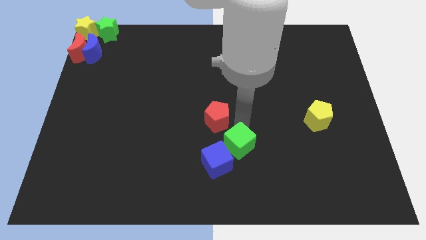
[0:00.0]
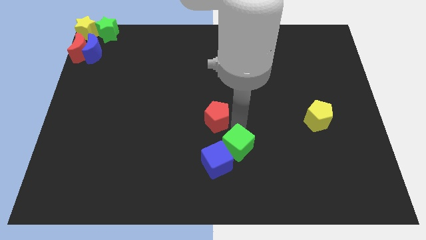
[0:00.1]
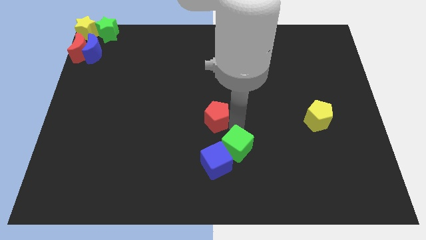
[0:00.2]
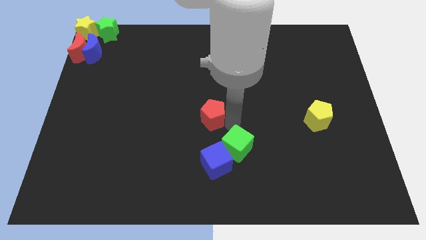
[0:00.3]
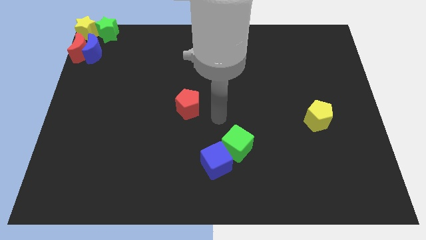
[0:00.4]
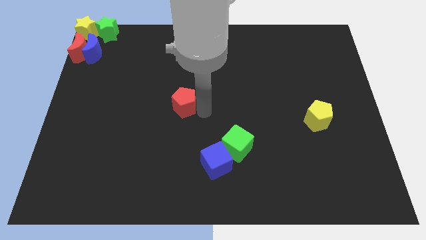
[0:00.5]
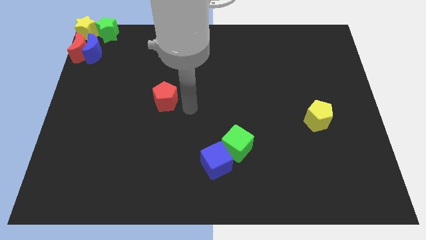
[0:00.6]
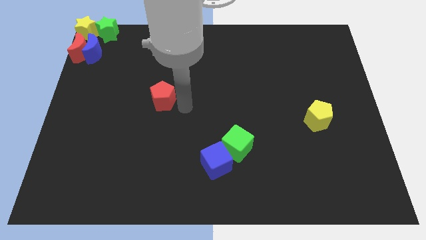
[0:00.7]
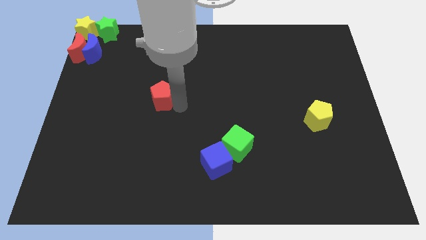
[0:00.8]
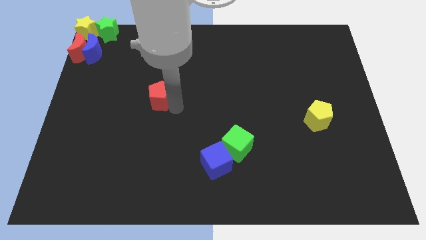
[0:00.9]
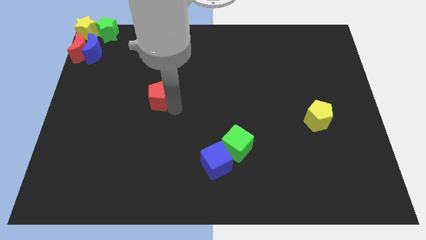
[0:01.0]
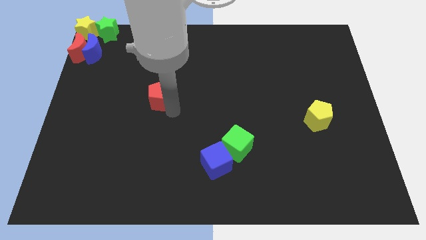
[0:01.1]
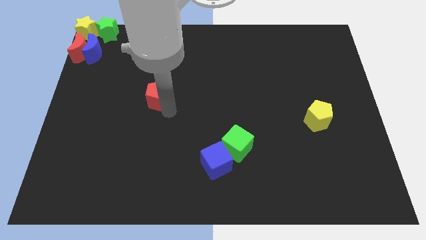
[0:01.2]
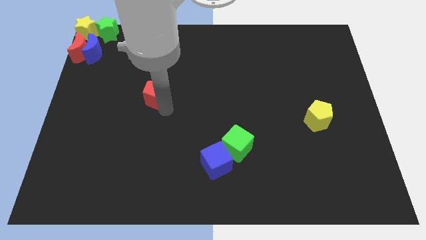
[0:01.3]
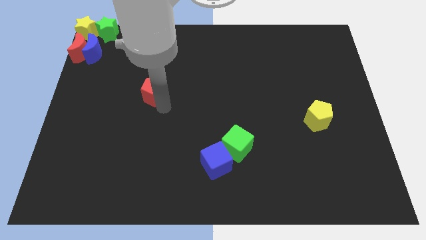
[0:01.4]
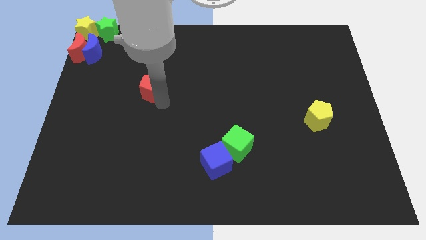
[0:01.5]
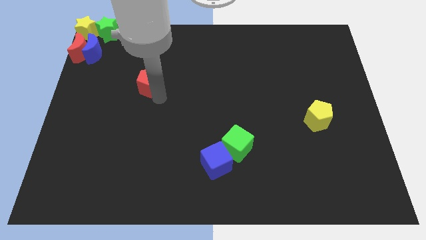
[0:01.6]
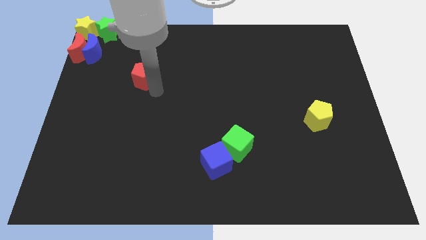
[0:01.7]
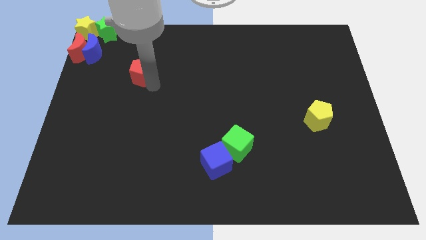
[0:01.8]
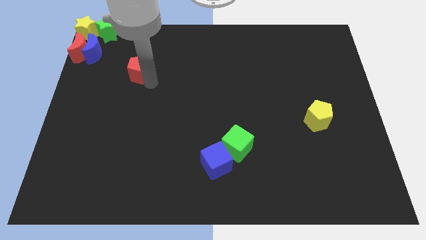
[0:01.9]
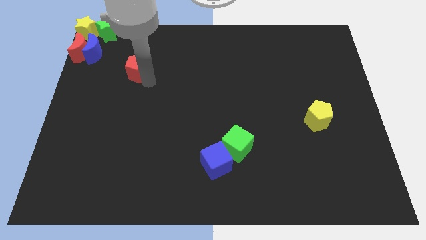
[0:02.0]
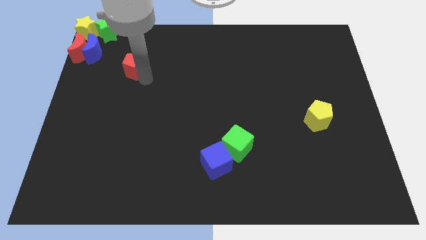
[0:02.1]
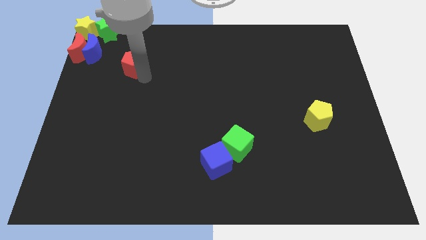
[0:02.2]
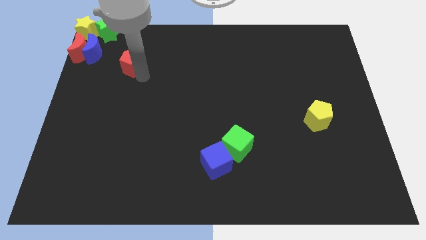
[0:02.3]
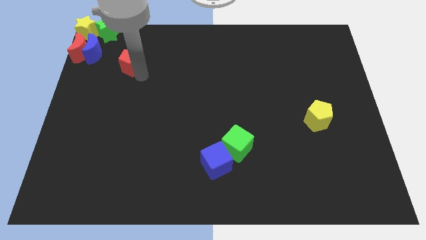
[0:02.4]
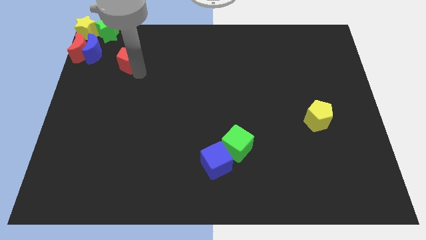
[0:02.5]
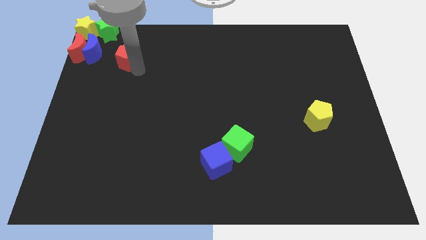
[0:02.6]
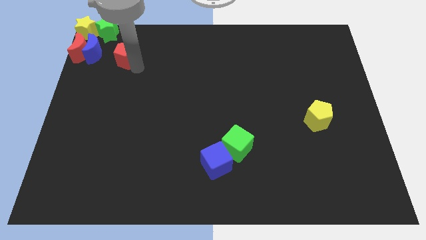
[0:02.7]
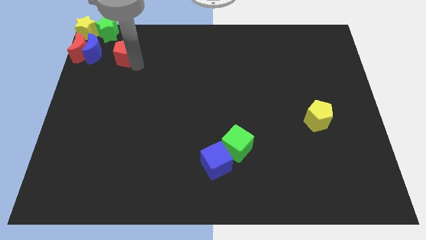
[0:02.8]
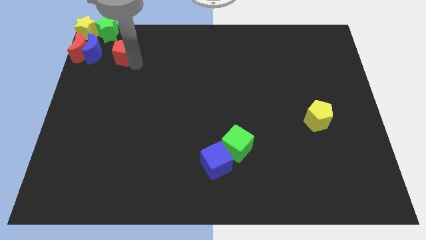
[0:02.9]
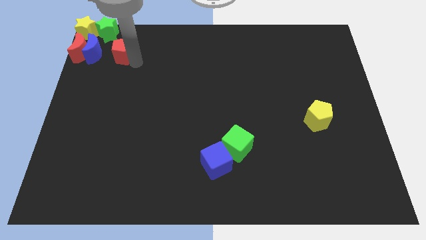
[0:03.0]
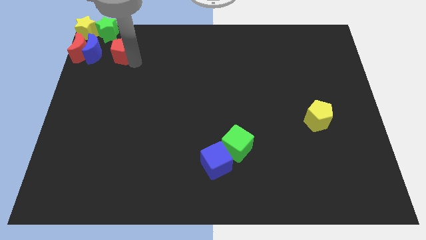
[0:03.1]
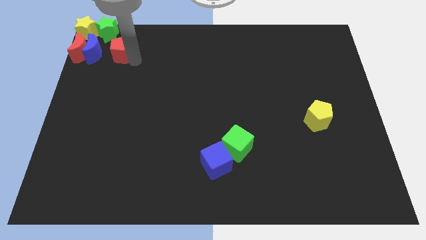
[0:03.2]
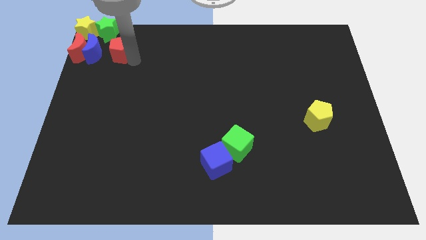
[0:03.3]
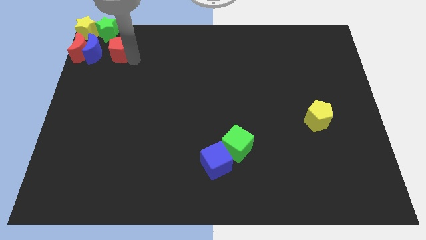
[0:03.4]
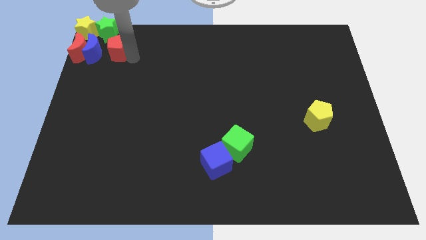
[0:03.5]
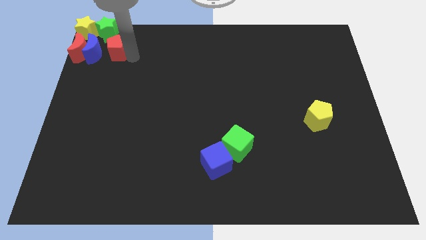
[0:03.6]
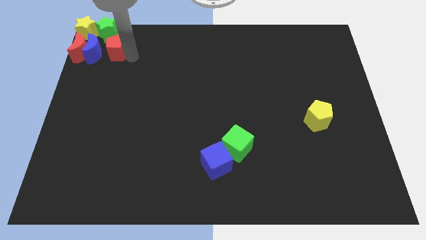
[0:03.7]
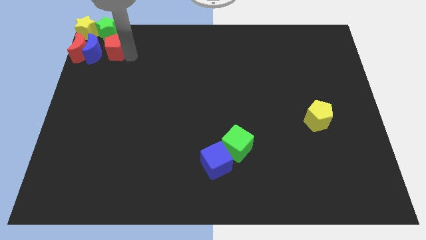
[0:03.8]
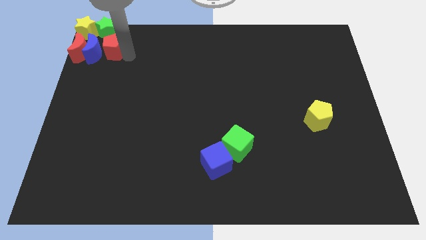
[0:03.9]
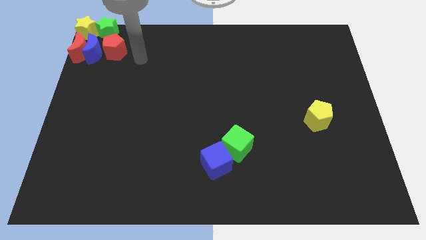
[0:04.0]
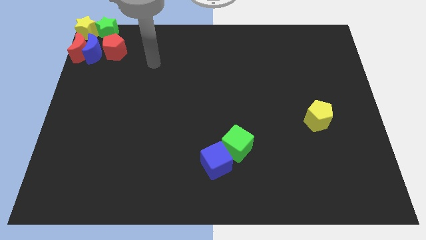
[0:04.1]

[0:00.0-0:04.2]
place the red pentagon at the right side of the blue moon

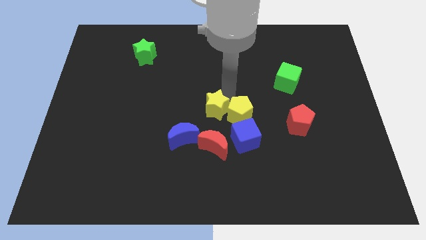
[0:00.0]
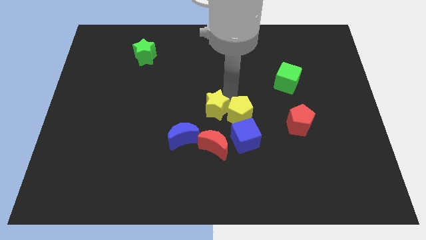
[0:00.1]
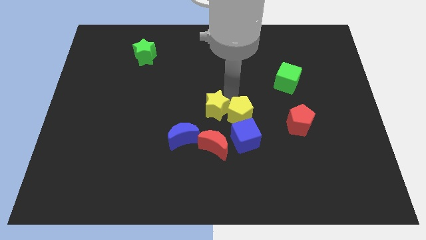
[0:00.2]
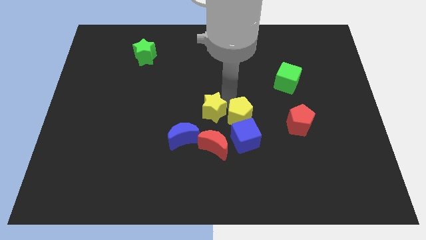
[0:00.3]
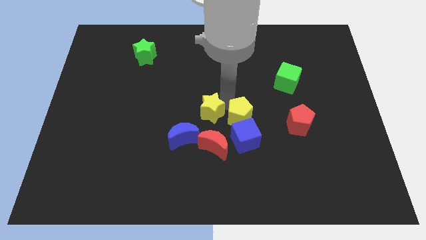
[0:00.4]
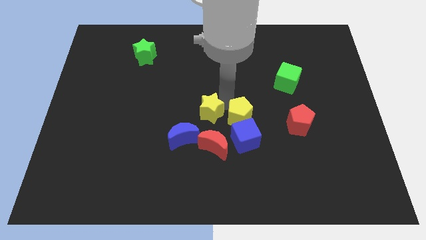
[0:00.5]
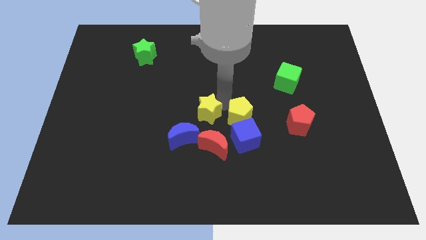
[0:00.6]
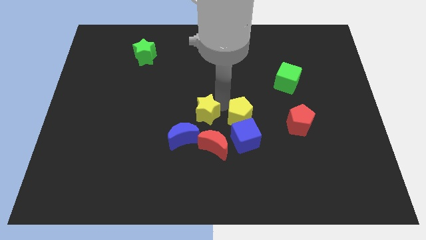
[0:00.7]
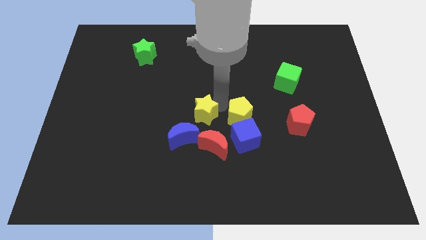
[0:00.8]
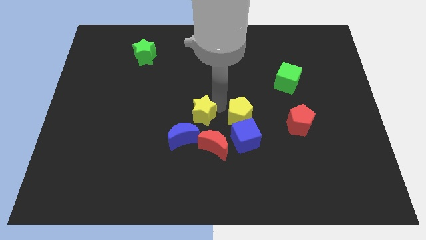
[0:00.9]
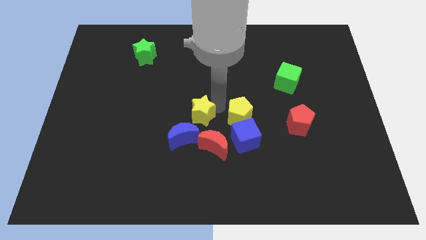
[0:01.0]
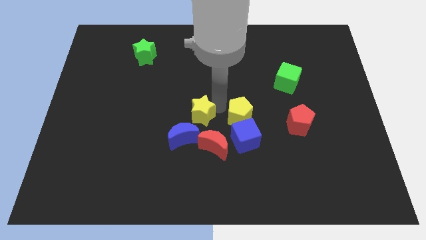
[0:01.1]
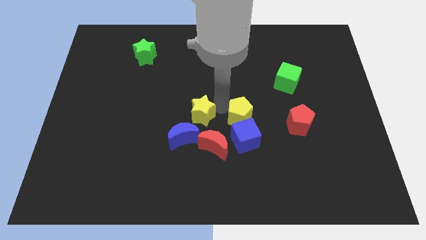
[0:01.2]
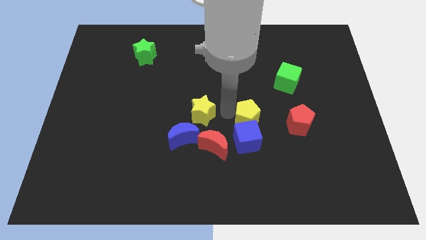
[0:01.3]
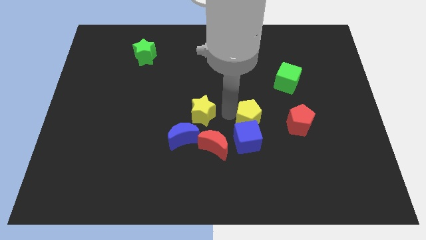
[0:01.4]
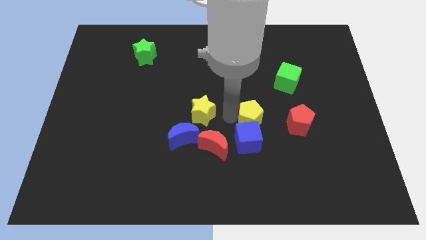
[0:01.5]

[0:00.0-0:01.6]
point your arm between yellow star and yellow penatgon

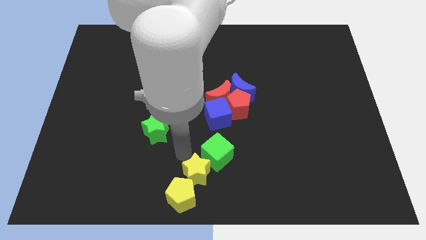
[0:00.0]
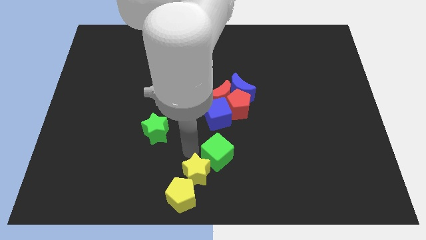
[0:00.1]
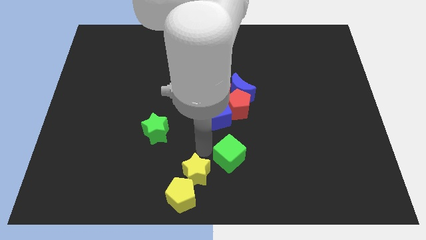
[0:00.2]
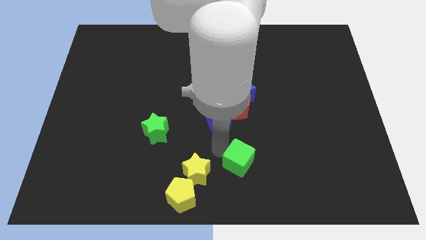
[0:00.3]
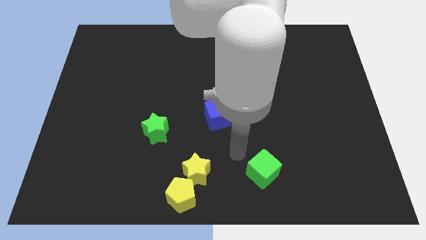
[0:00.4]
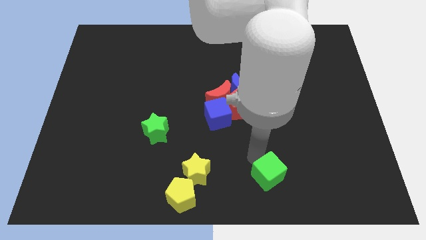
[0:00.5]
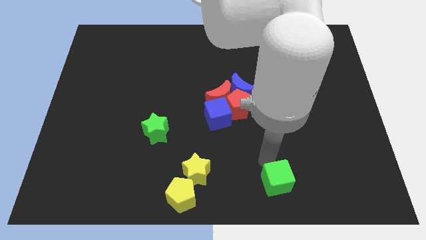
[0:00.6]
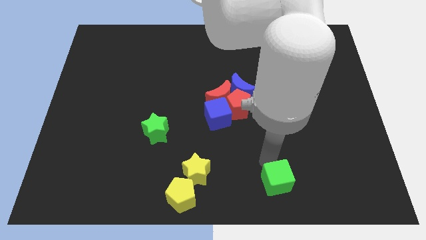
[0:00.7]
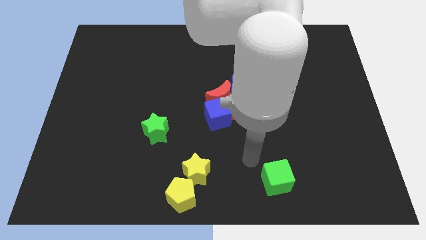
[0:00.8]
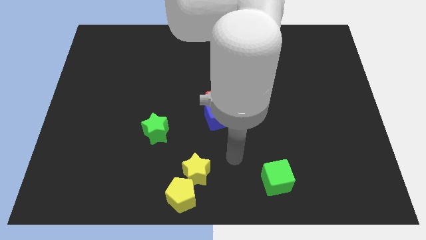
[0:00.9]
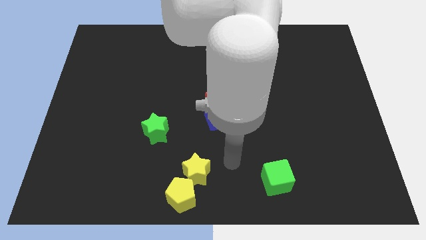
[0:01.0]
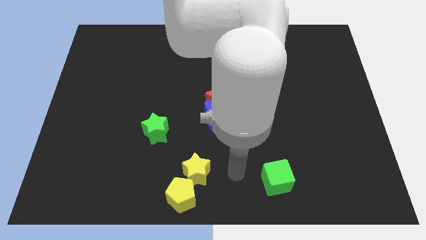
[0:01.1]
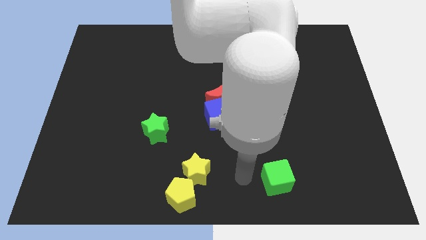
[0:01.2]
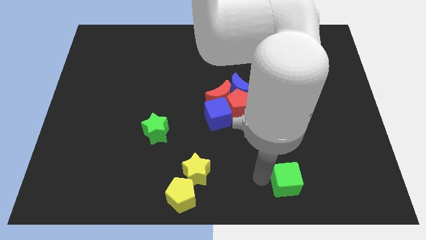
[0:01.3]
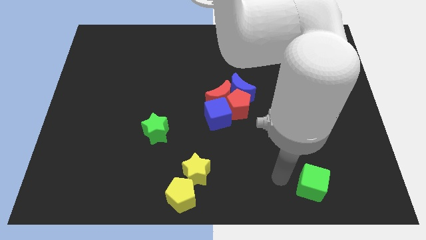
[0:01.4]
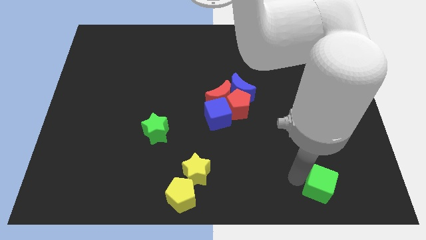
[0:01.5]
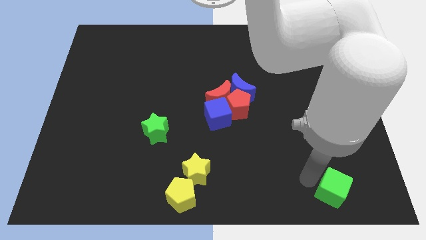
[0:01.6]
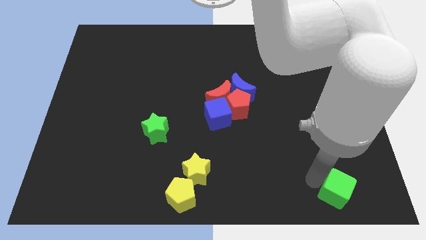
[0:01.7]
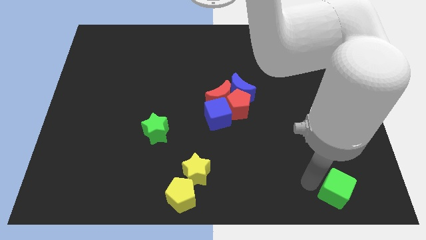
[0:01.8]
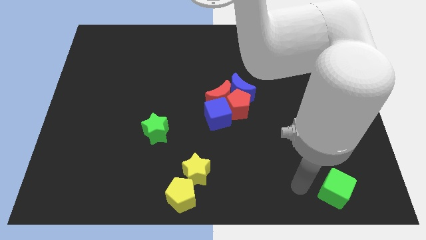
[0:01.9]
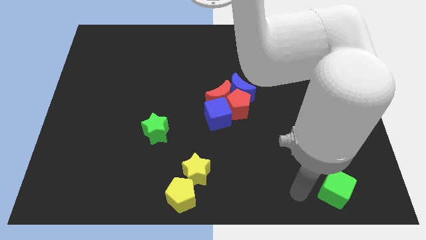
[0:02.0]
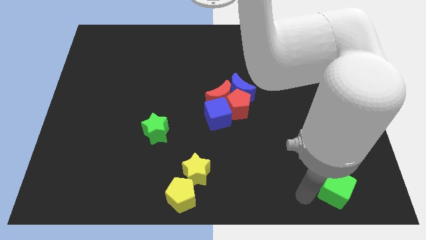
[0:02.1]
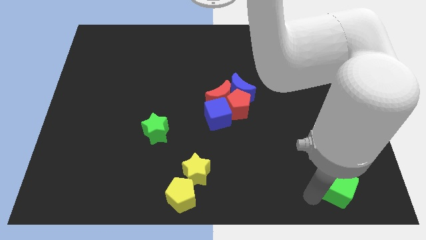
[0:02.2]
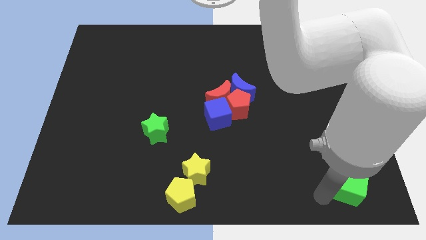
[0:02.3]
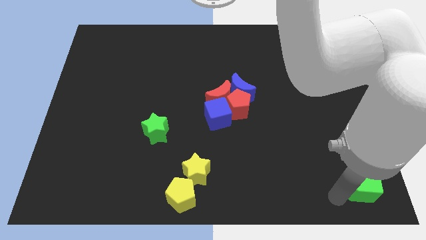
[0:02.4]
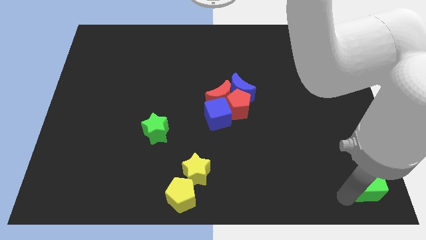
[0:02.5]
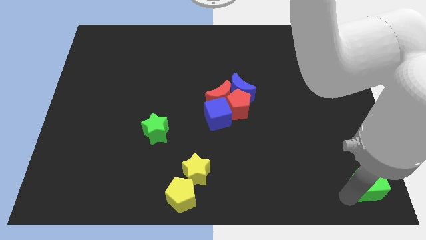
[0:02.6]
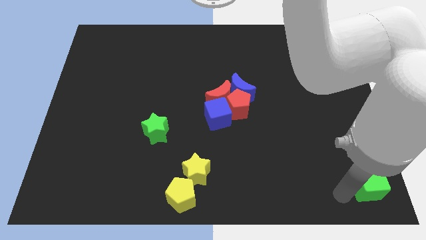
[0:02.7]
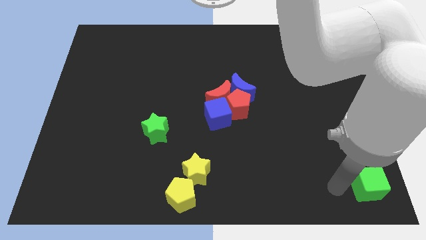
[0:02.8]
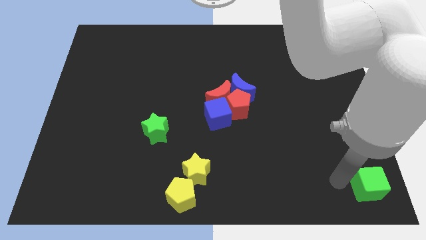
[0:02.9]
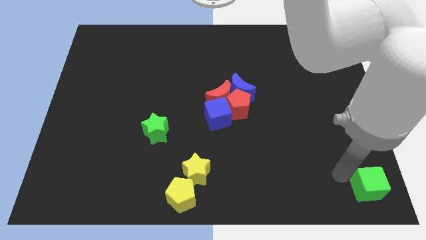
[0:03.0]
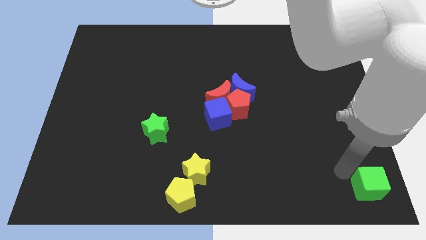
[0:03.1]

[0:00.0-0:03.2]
separate the green cube from the yellow star
